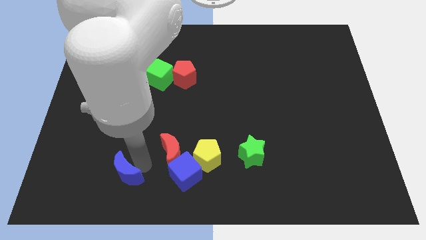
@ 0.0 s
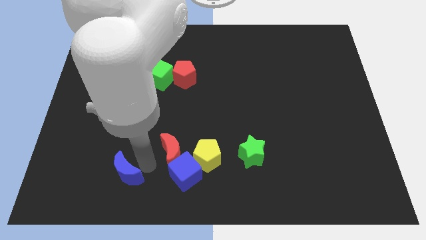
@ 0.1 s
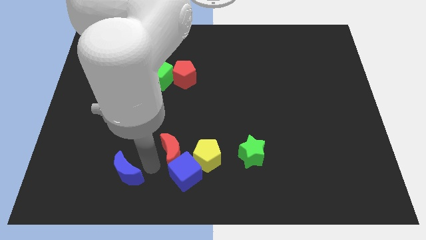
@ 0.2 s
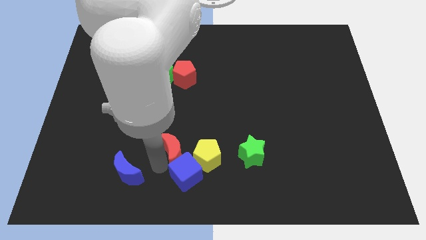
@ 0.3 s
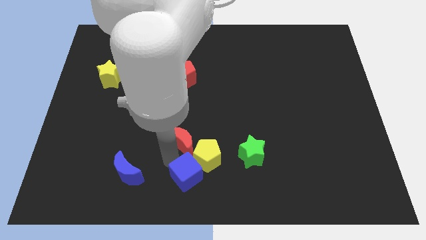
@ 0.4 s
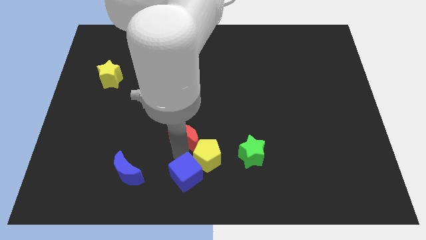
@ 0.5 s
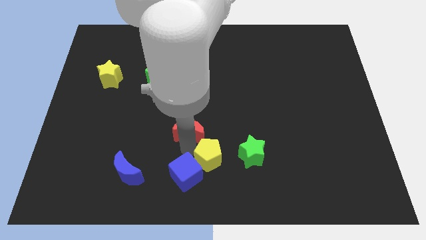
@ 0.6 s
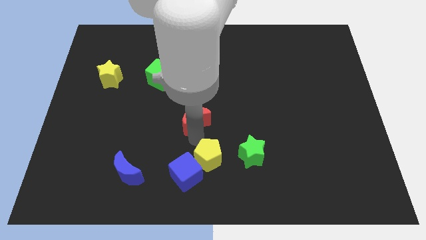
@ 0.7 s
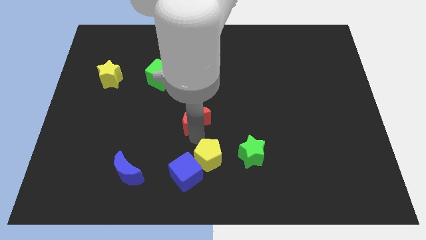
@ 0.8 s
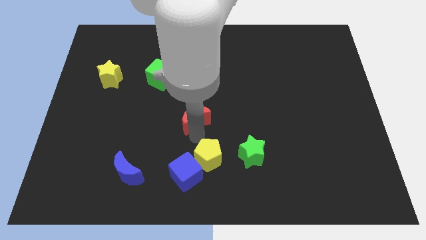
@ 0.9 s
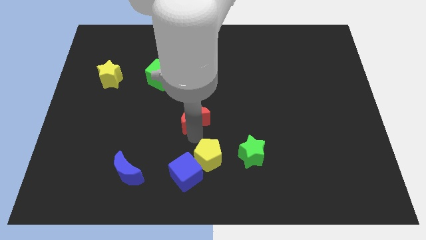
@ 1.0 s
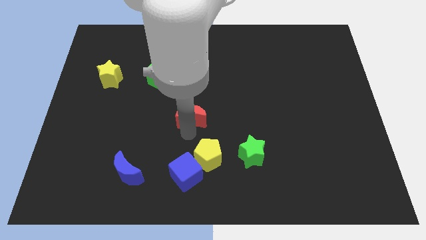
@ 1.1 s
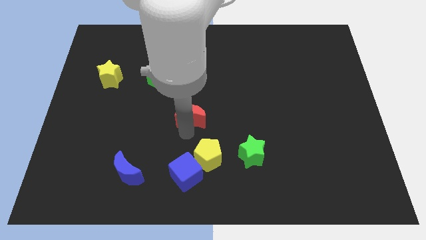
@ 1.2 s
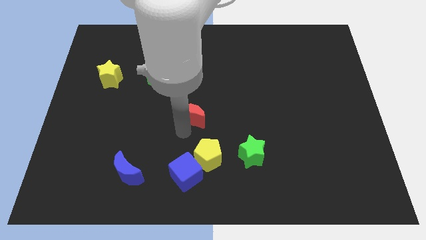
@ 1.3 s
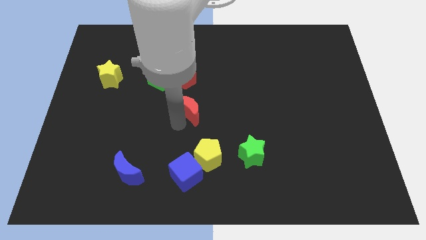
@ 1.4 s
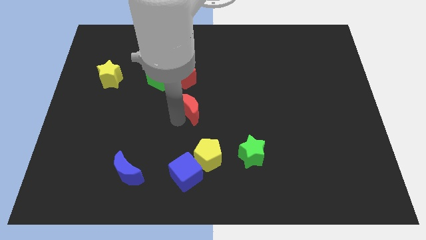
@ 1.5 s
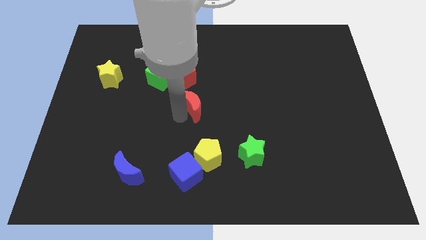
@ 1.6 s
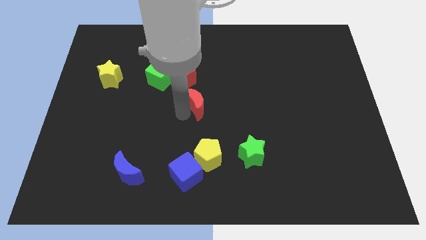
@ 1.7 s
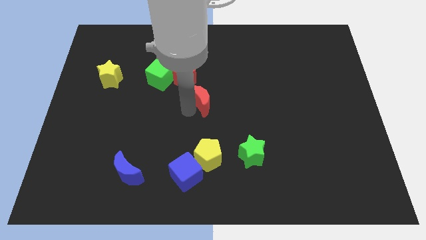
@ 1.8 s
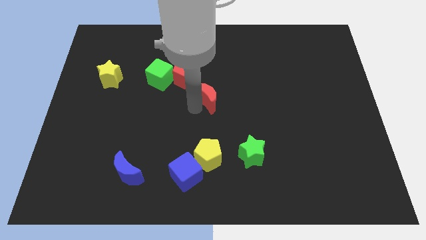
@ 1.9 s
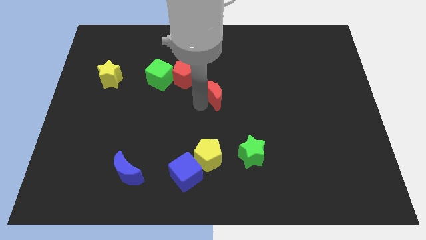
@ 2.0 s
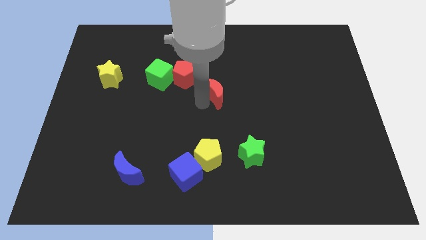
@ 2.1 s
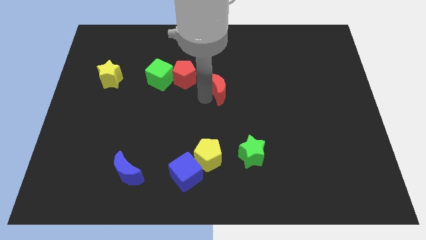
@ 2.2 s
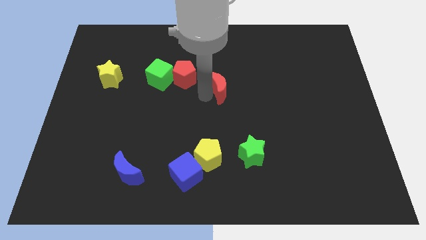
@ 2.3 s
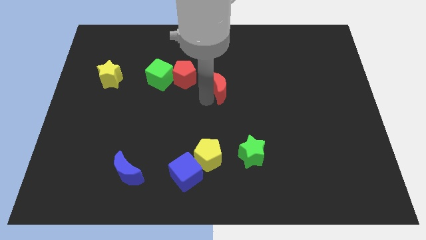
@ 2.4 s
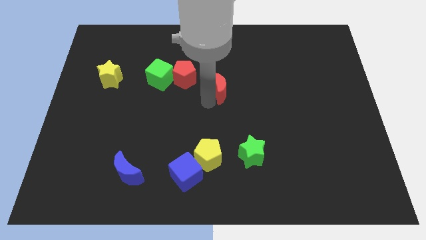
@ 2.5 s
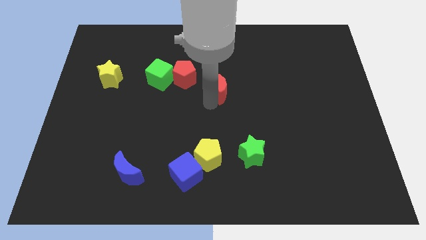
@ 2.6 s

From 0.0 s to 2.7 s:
separate the blue cube and red moon

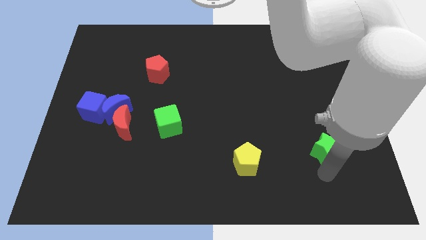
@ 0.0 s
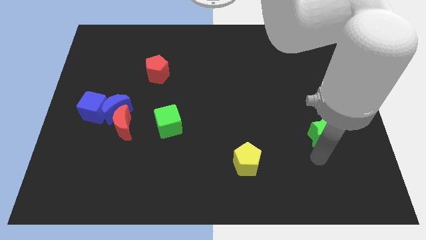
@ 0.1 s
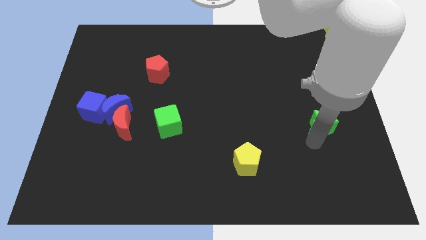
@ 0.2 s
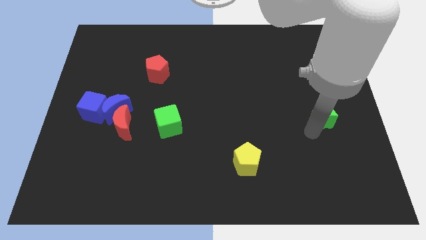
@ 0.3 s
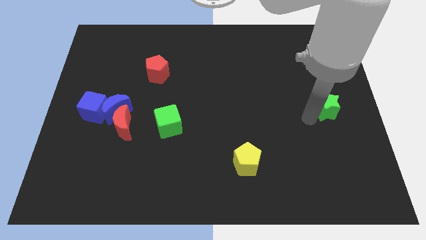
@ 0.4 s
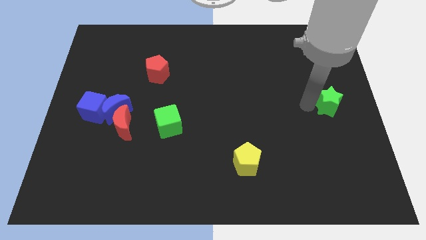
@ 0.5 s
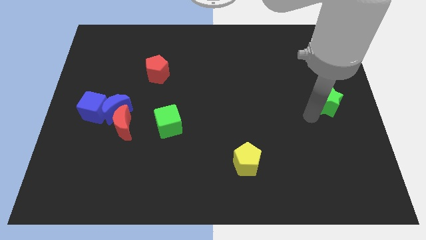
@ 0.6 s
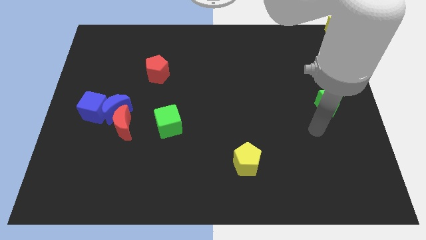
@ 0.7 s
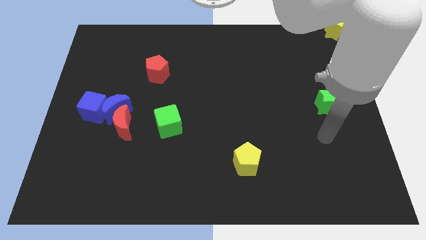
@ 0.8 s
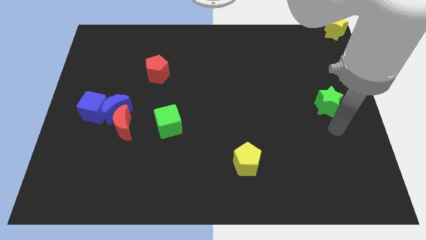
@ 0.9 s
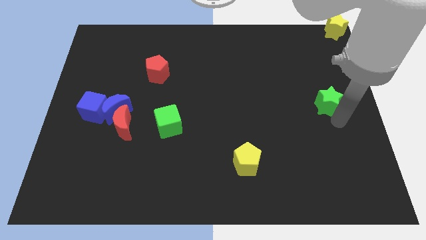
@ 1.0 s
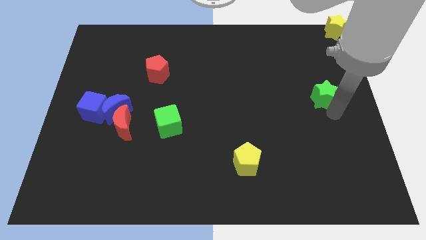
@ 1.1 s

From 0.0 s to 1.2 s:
move the green star slightly towards the top right of the board

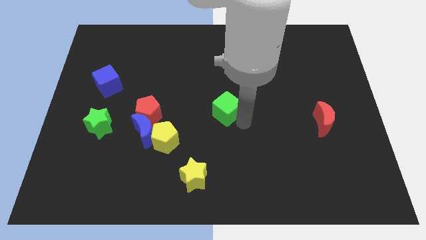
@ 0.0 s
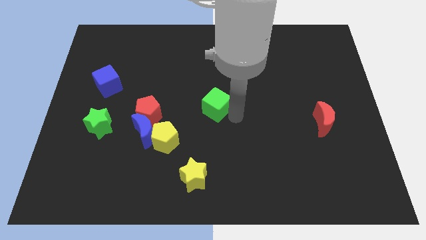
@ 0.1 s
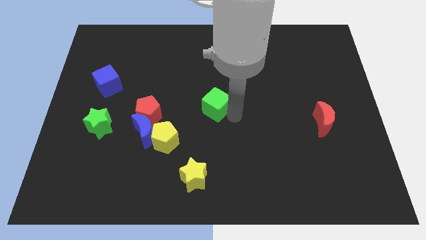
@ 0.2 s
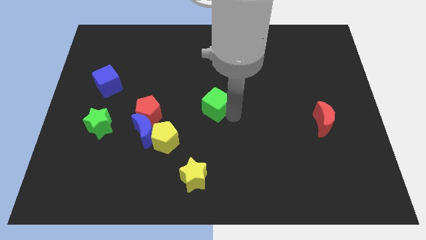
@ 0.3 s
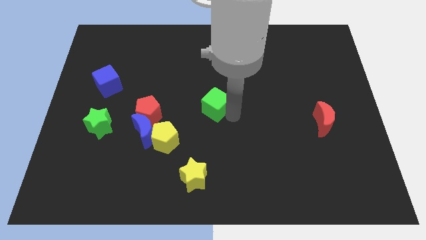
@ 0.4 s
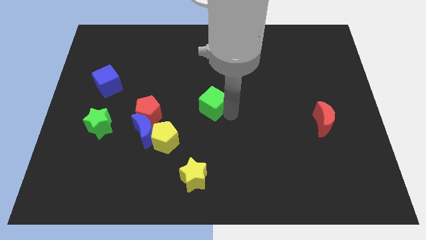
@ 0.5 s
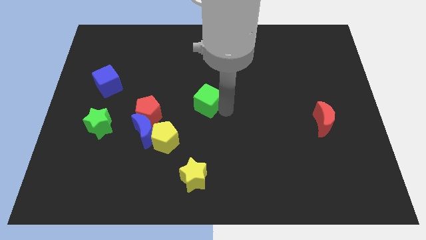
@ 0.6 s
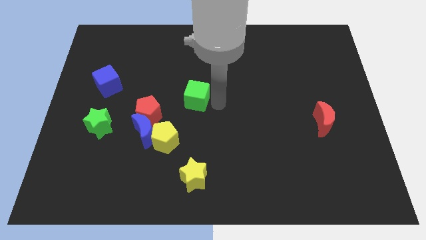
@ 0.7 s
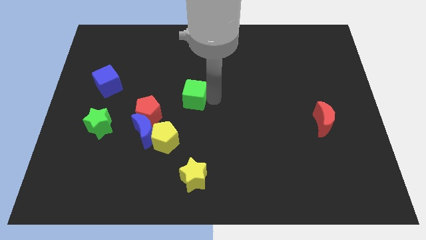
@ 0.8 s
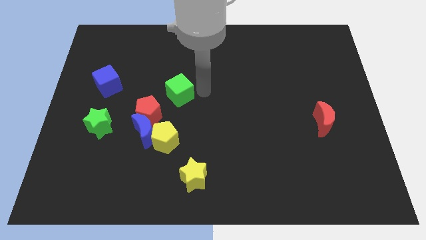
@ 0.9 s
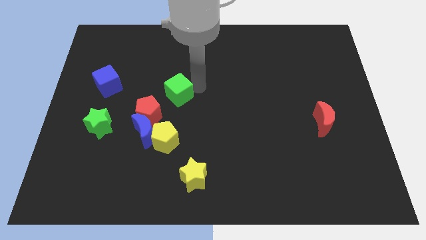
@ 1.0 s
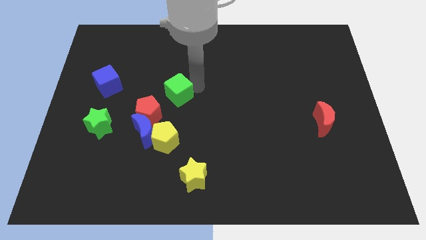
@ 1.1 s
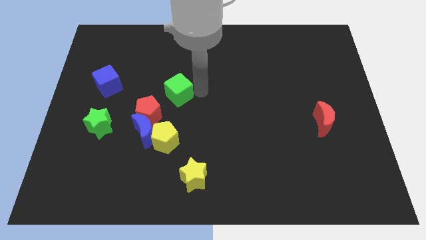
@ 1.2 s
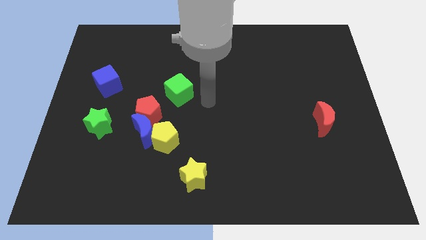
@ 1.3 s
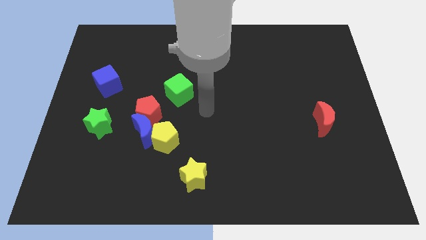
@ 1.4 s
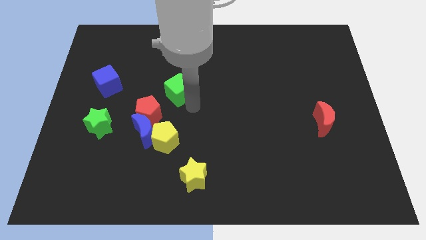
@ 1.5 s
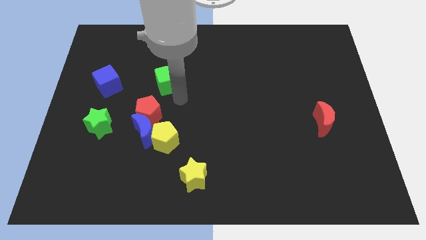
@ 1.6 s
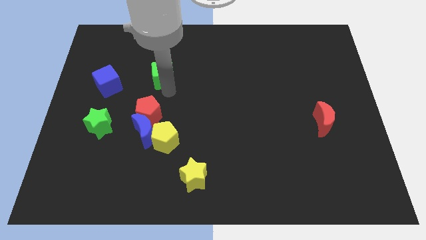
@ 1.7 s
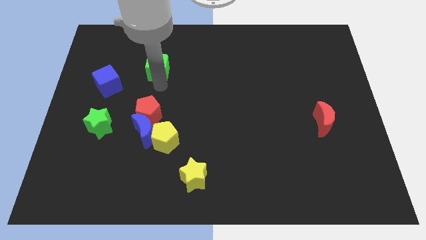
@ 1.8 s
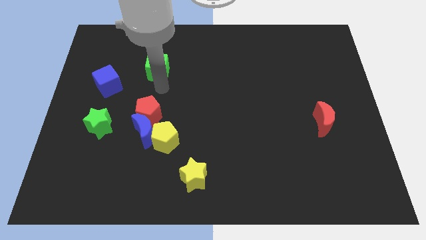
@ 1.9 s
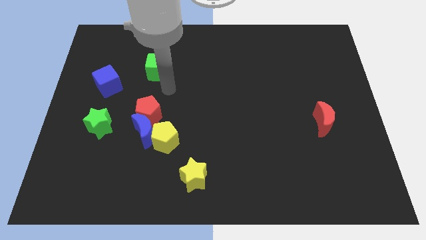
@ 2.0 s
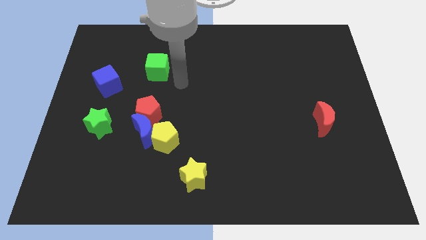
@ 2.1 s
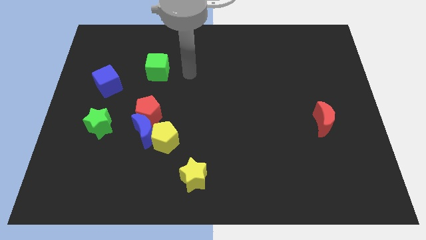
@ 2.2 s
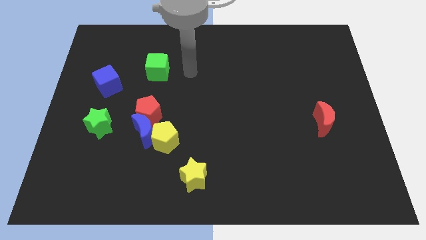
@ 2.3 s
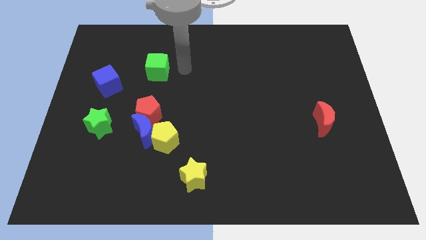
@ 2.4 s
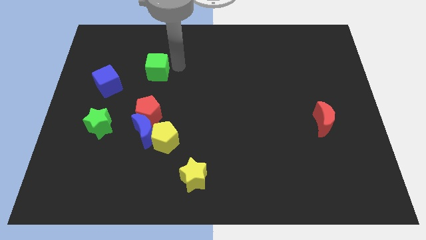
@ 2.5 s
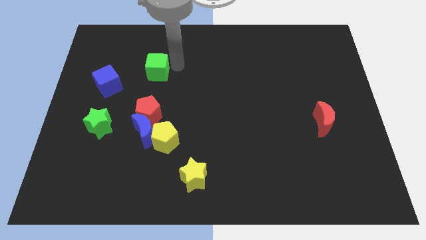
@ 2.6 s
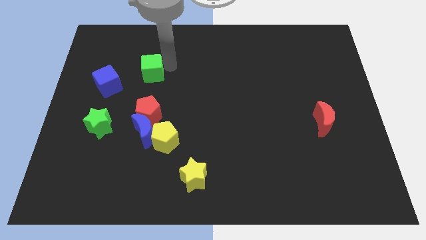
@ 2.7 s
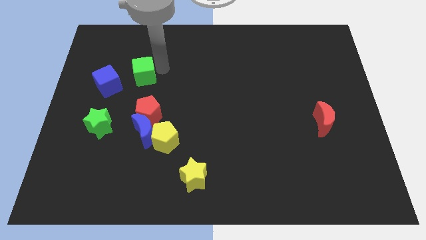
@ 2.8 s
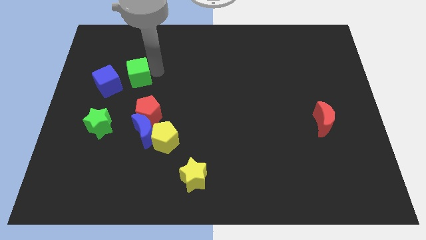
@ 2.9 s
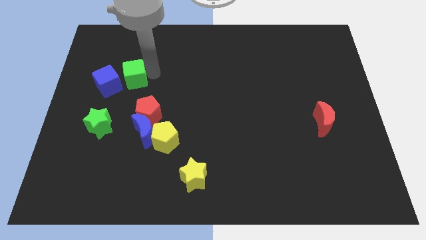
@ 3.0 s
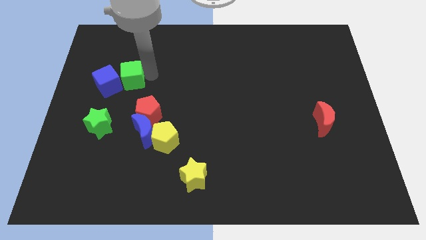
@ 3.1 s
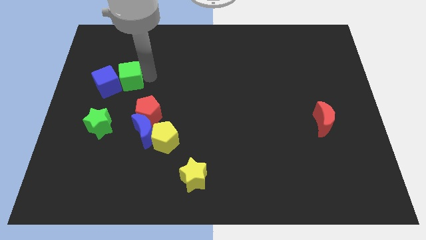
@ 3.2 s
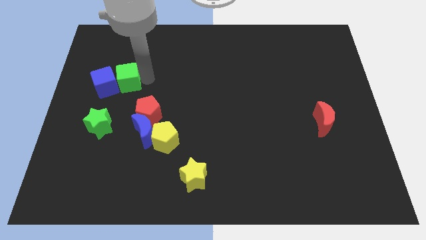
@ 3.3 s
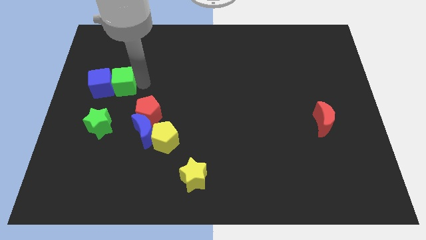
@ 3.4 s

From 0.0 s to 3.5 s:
push the green cube close right to the blue cube

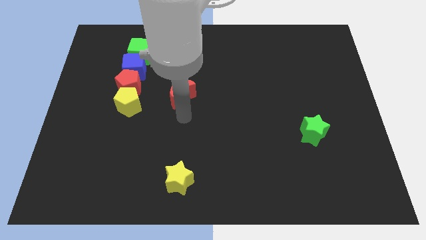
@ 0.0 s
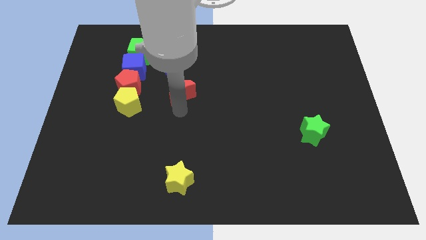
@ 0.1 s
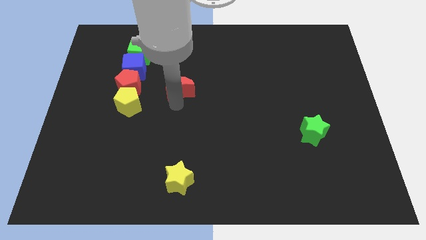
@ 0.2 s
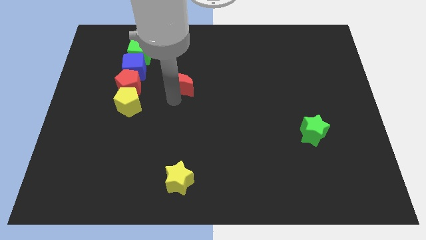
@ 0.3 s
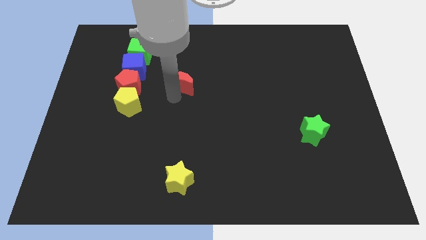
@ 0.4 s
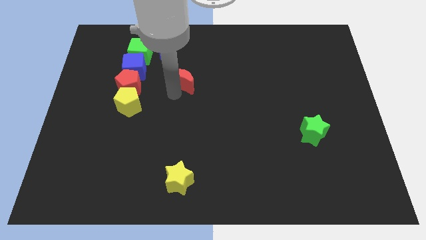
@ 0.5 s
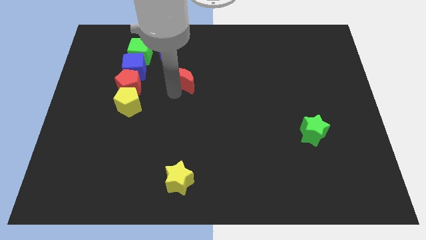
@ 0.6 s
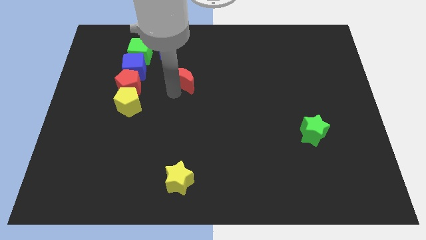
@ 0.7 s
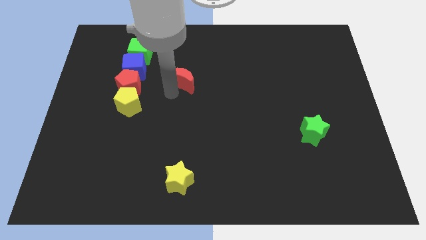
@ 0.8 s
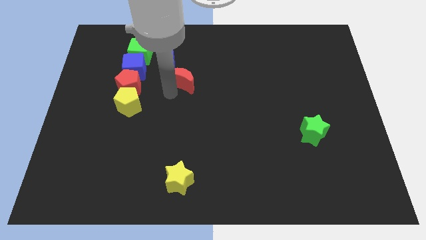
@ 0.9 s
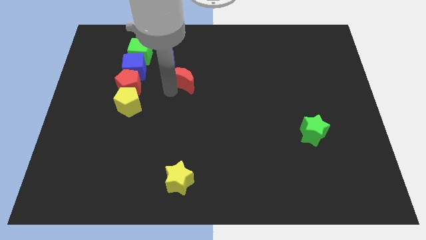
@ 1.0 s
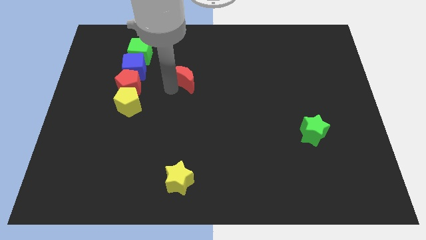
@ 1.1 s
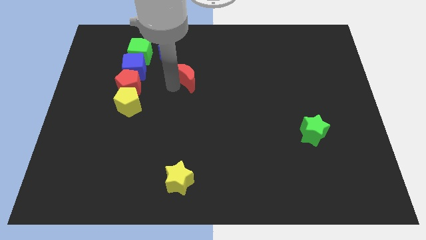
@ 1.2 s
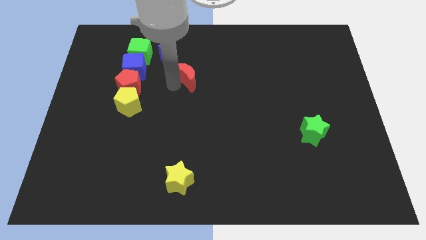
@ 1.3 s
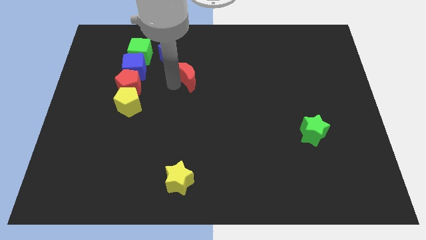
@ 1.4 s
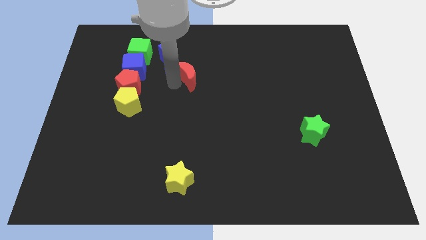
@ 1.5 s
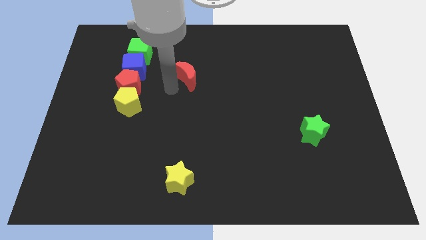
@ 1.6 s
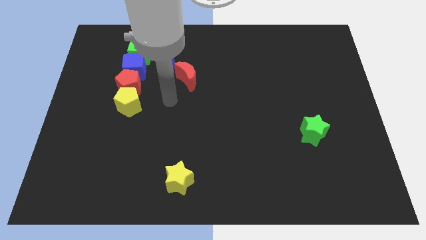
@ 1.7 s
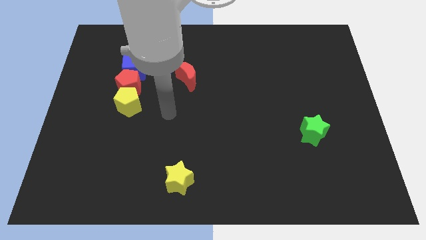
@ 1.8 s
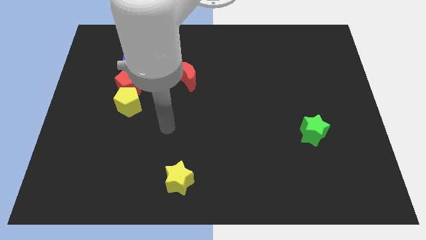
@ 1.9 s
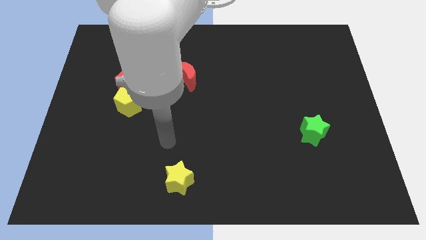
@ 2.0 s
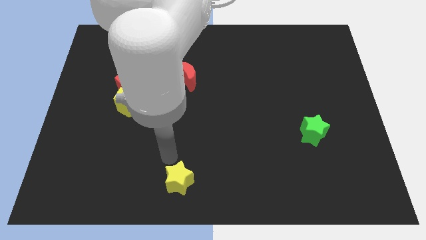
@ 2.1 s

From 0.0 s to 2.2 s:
move the red pentagon towards top
